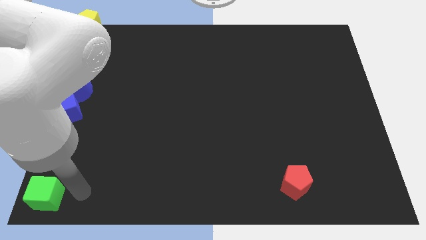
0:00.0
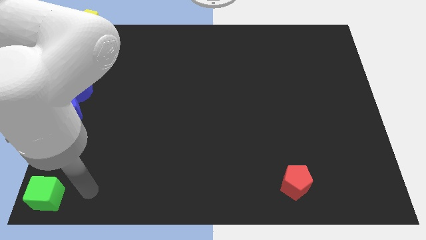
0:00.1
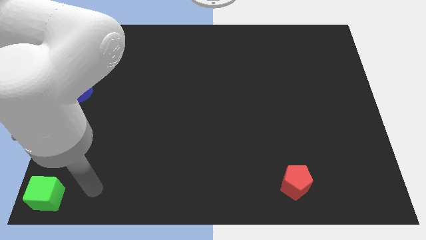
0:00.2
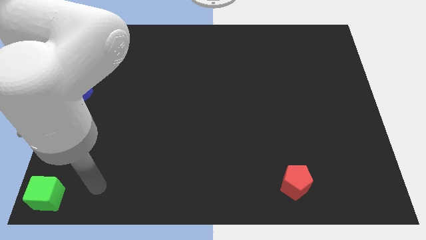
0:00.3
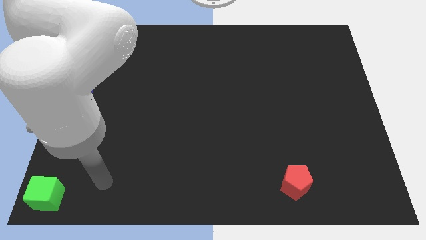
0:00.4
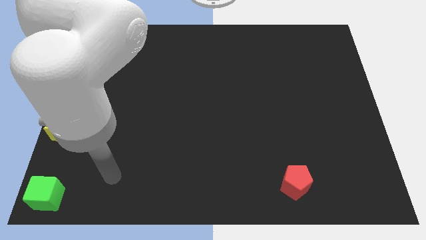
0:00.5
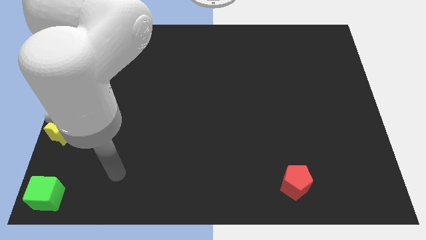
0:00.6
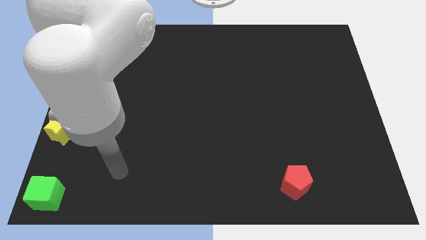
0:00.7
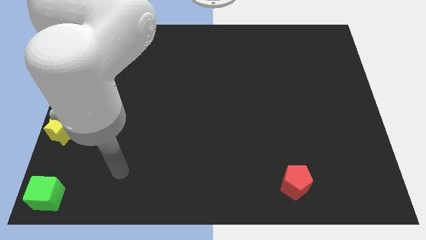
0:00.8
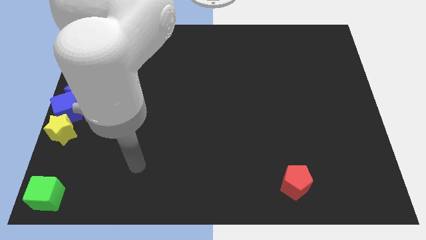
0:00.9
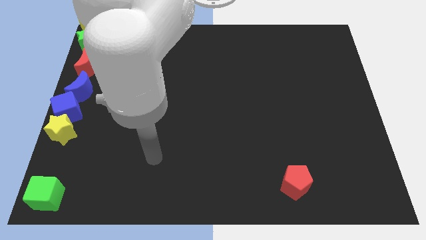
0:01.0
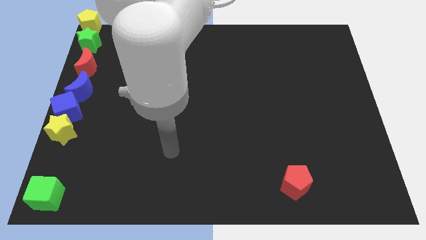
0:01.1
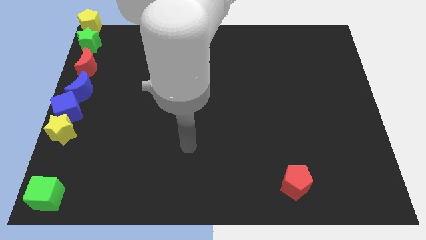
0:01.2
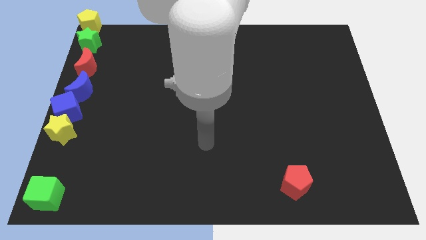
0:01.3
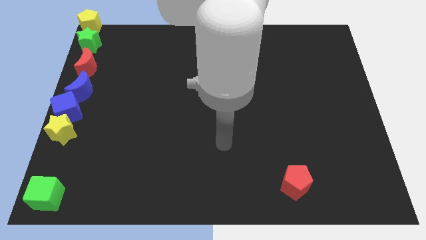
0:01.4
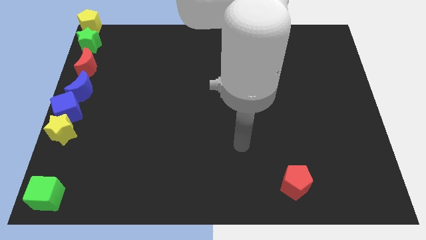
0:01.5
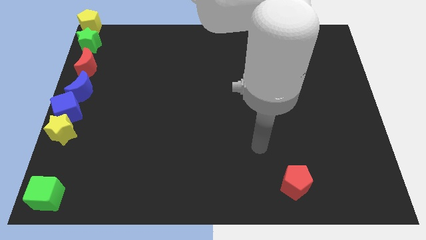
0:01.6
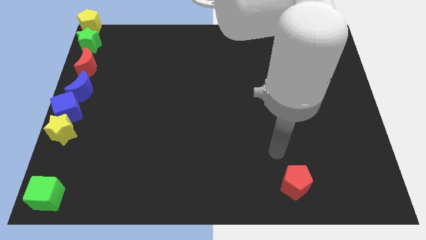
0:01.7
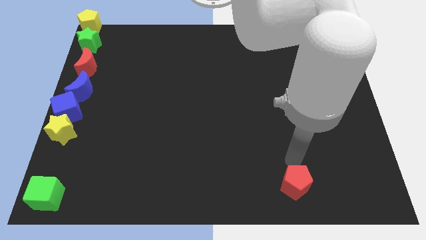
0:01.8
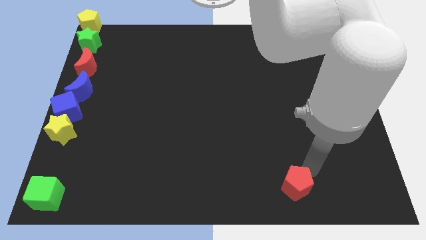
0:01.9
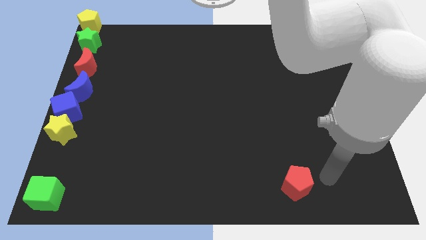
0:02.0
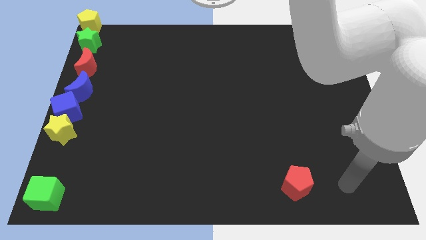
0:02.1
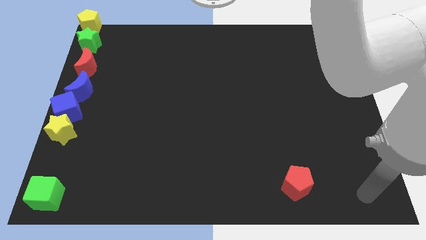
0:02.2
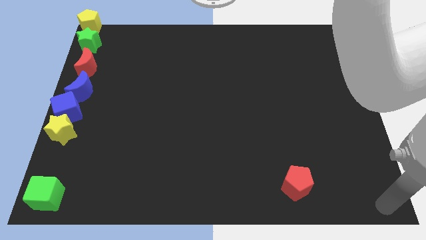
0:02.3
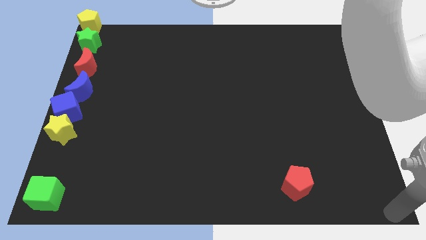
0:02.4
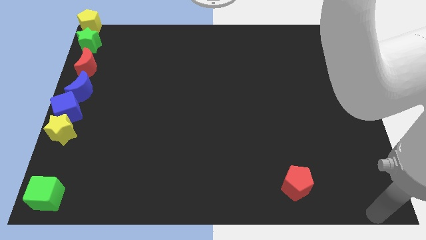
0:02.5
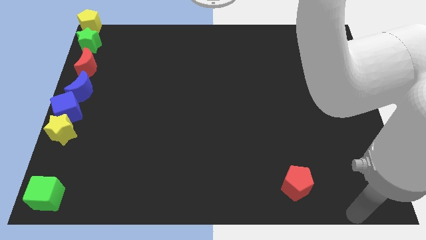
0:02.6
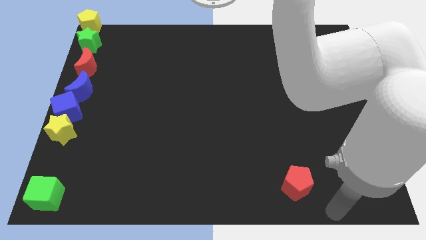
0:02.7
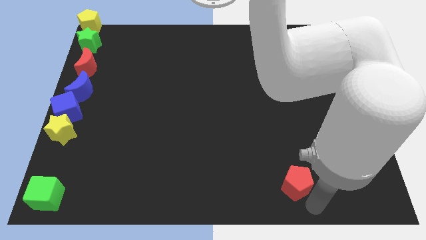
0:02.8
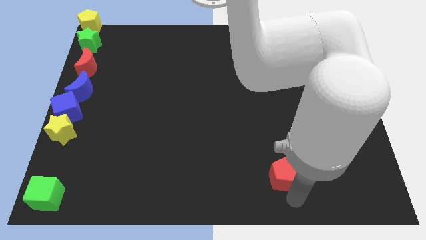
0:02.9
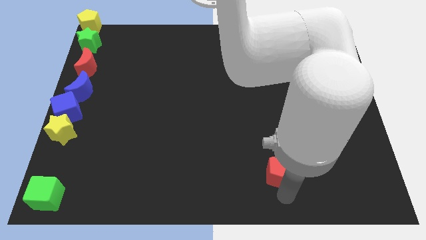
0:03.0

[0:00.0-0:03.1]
point your arm at the bottom side of red pentagon

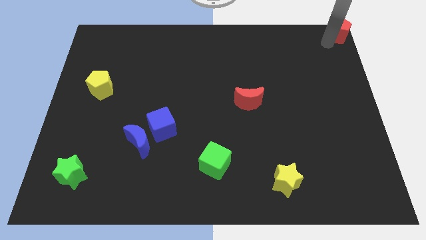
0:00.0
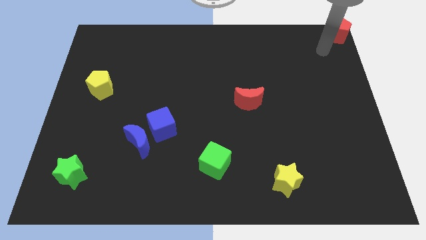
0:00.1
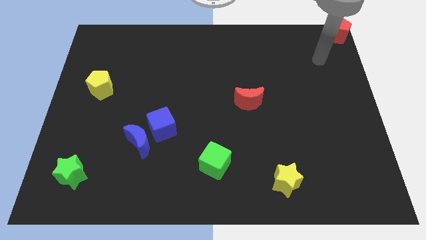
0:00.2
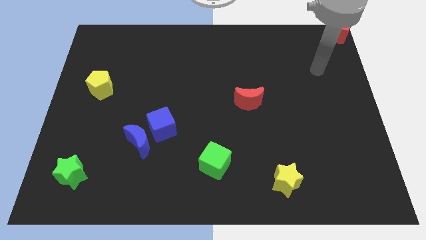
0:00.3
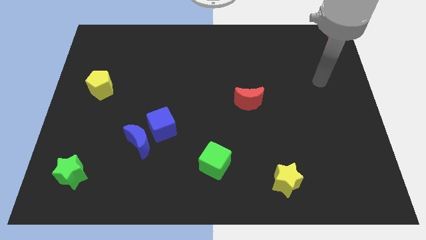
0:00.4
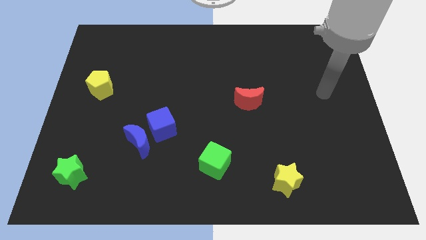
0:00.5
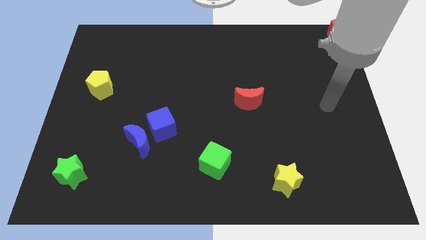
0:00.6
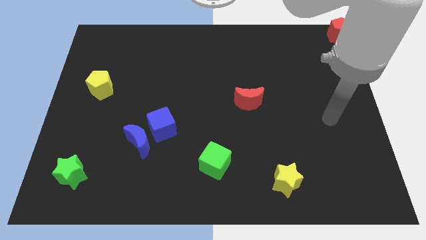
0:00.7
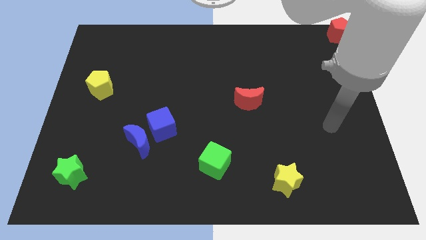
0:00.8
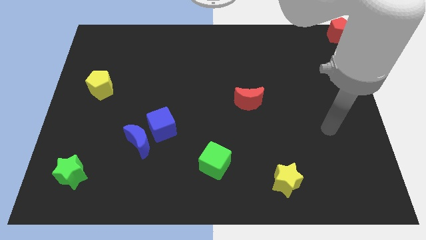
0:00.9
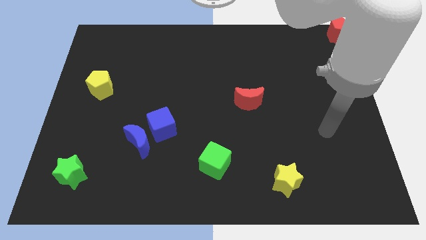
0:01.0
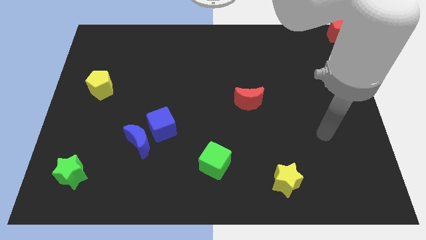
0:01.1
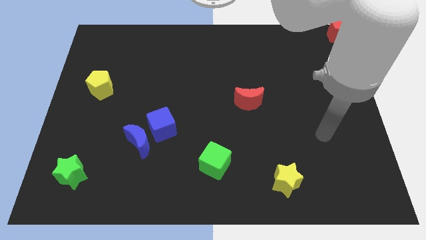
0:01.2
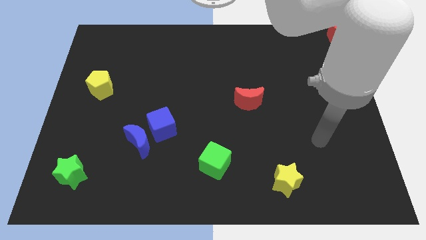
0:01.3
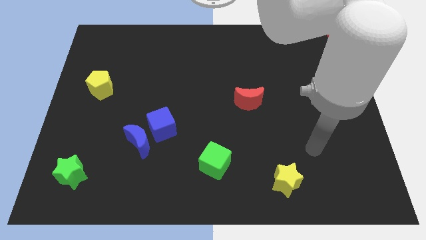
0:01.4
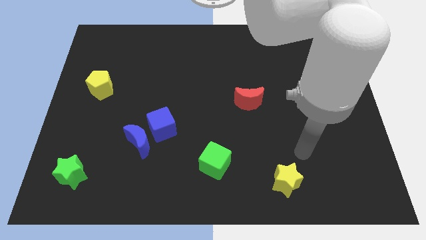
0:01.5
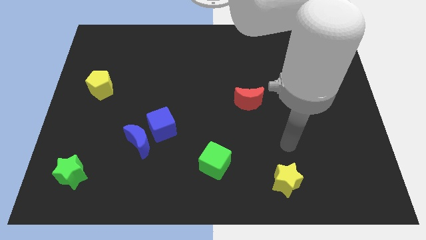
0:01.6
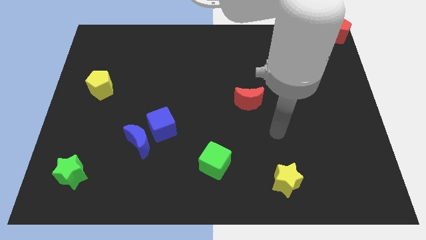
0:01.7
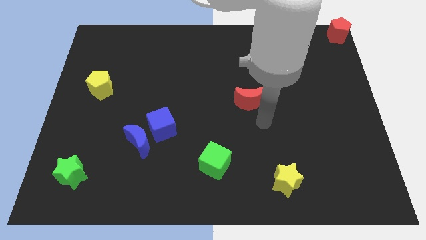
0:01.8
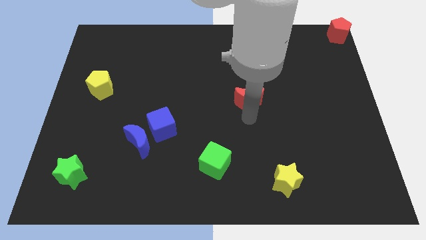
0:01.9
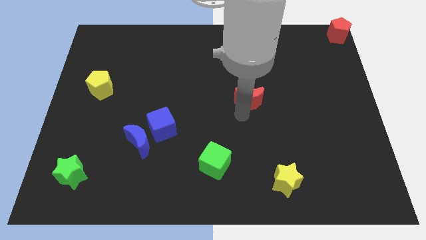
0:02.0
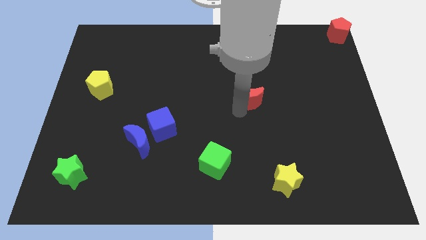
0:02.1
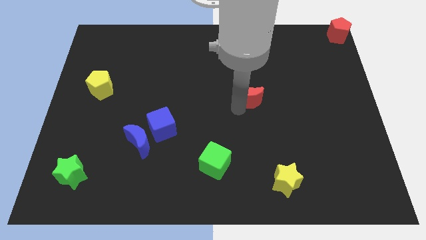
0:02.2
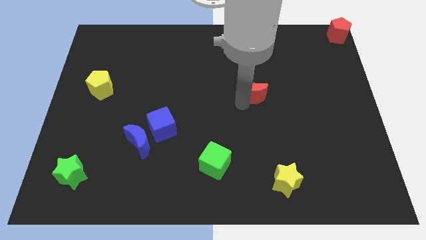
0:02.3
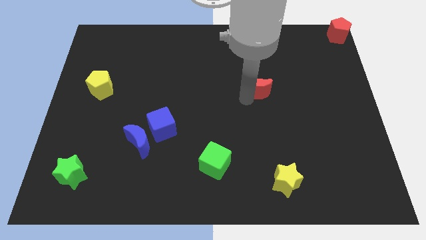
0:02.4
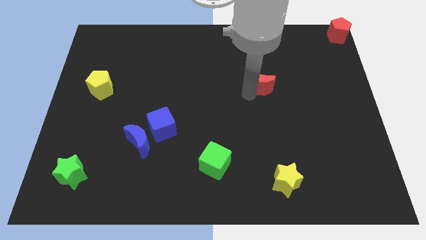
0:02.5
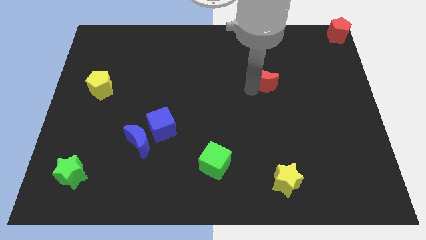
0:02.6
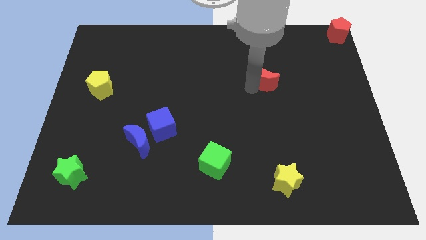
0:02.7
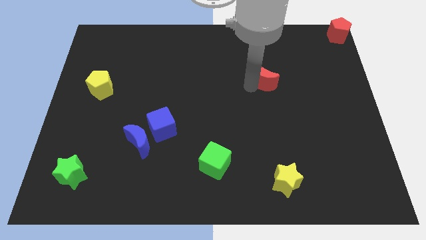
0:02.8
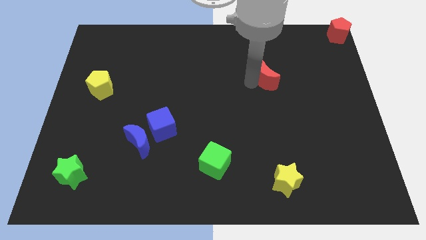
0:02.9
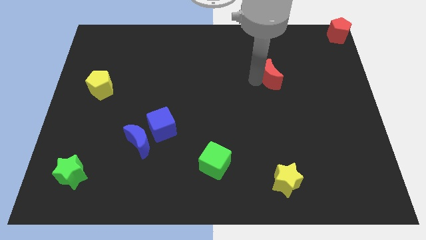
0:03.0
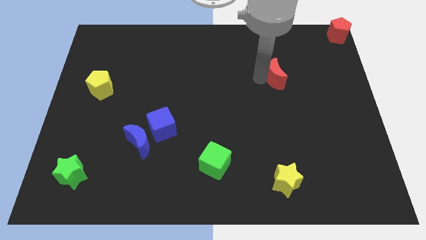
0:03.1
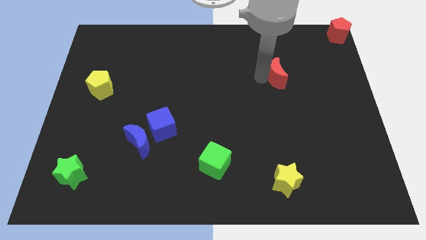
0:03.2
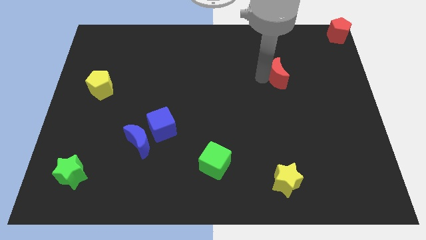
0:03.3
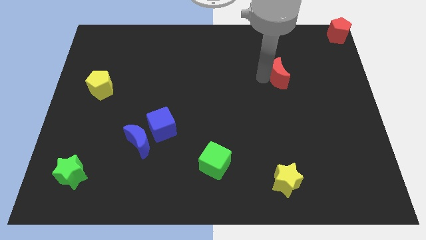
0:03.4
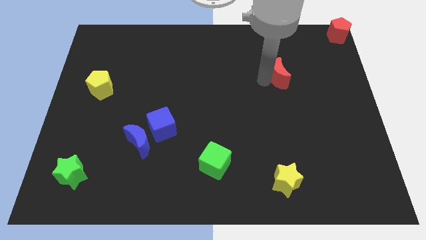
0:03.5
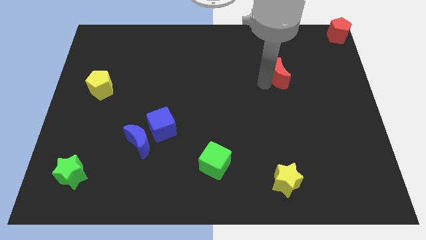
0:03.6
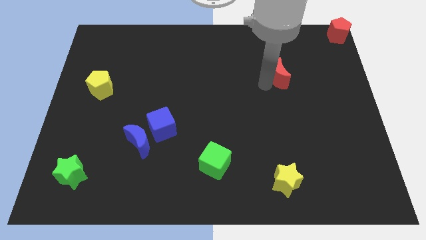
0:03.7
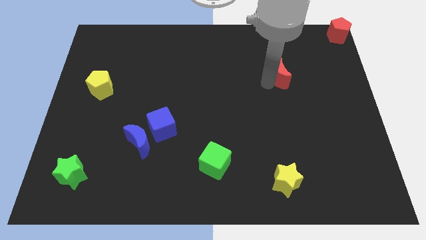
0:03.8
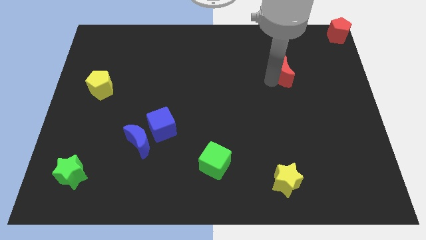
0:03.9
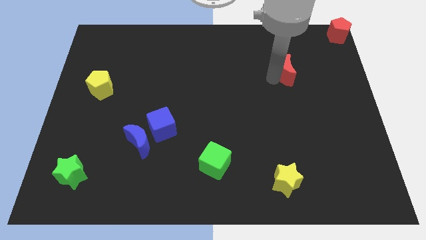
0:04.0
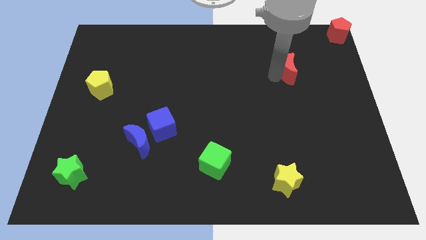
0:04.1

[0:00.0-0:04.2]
move the red crescent to the bottom left corner of the red pentagon

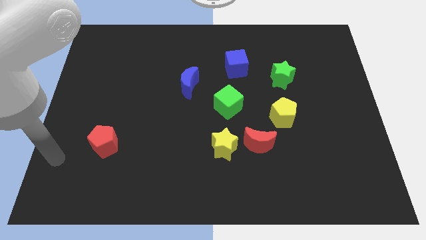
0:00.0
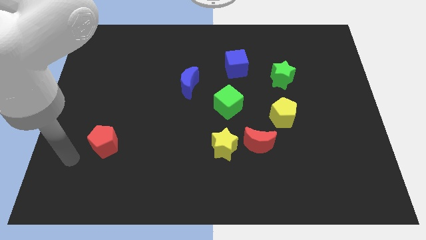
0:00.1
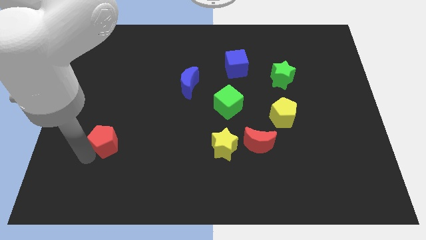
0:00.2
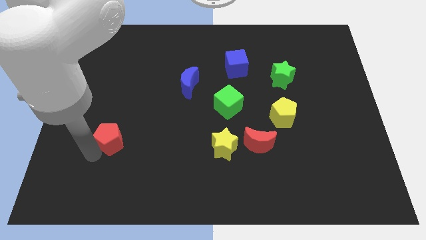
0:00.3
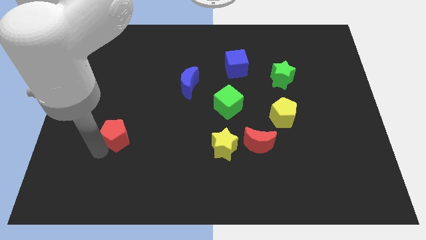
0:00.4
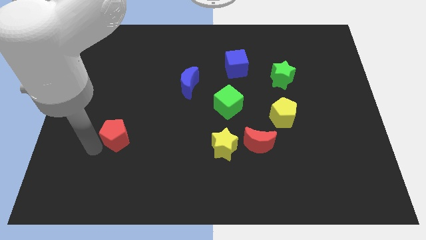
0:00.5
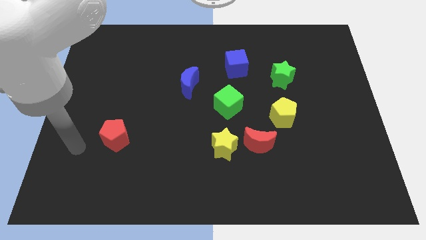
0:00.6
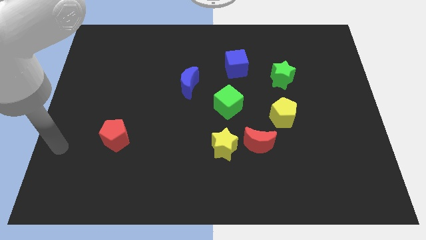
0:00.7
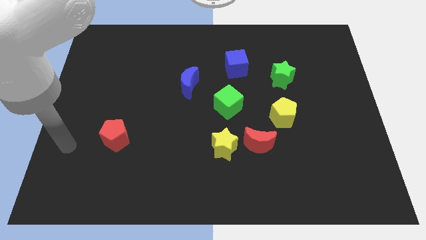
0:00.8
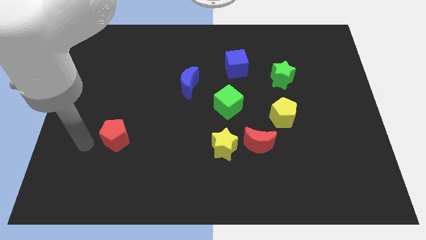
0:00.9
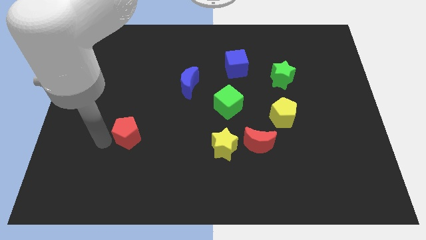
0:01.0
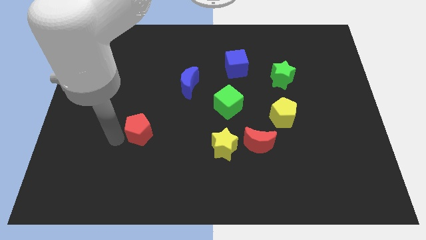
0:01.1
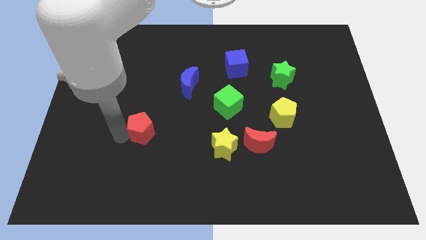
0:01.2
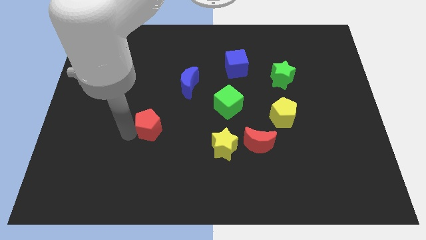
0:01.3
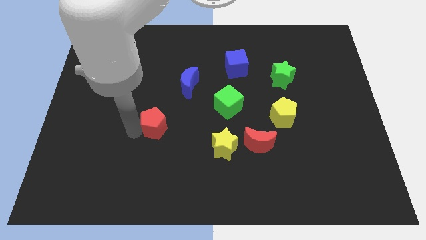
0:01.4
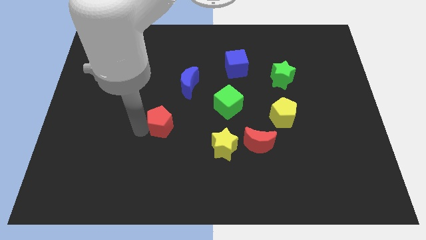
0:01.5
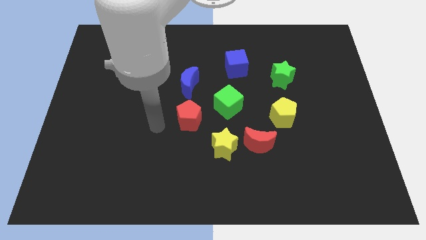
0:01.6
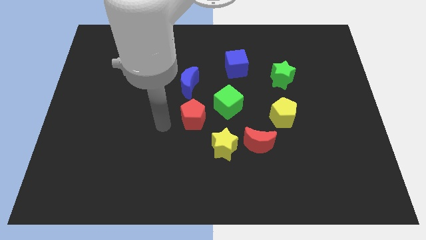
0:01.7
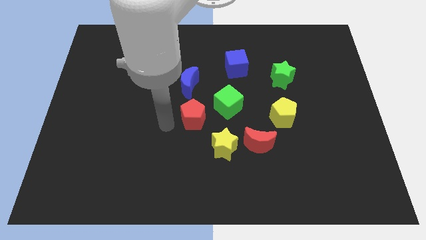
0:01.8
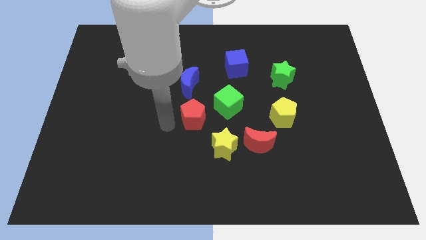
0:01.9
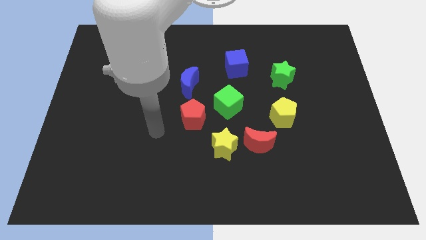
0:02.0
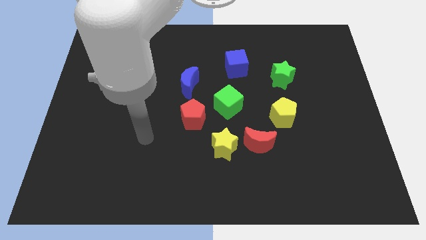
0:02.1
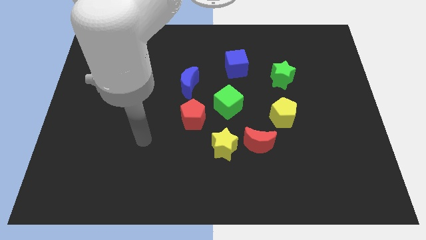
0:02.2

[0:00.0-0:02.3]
move the red pentagon to wards the left of green cube
